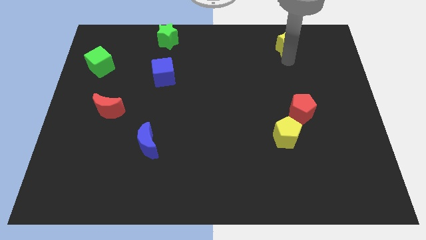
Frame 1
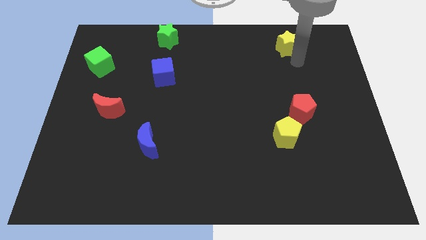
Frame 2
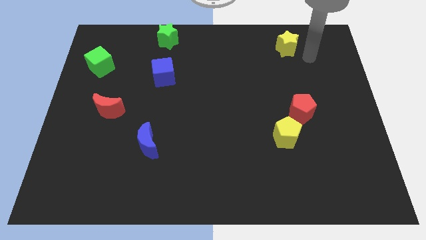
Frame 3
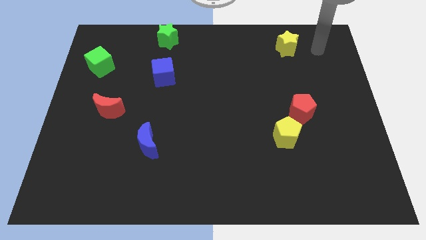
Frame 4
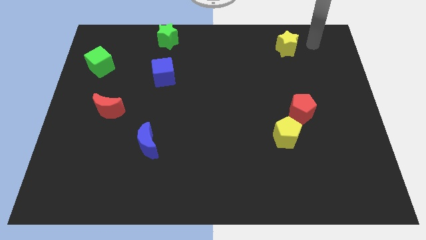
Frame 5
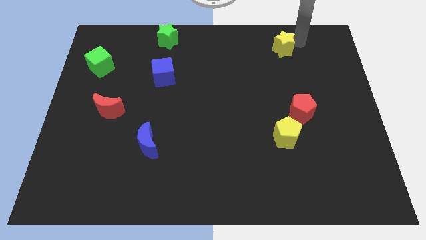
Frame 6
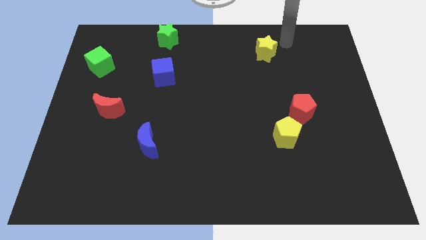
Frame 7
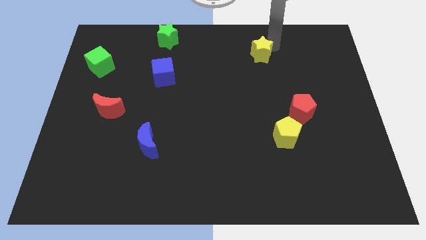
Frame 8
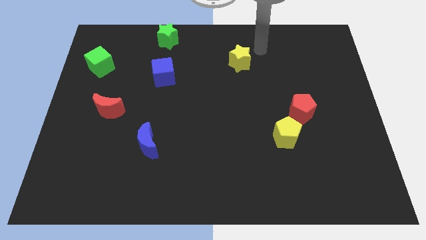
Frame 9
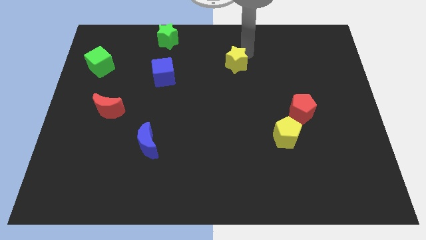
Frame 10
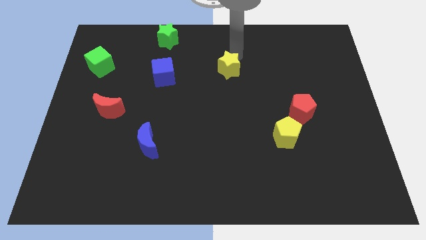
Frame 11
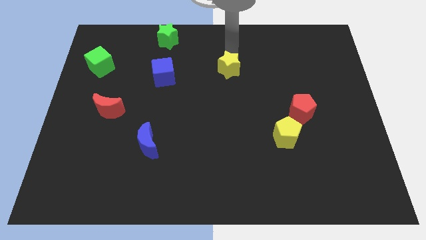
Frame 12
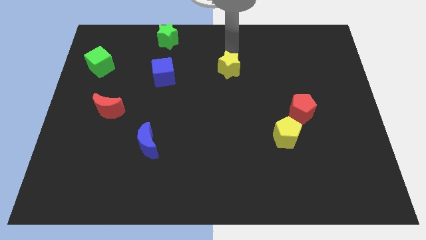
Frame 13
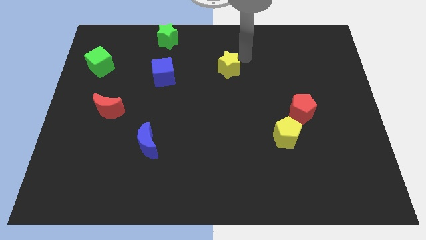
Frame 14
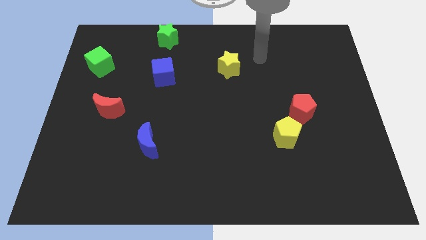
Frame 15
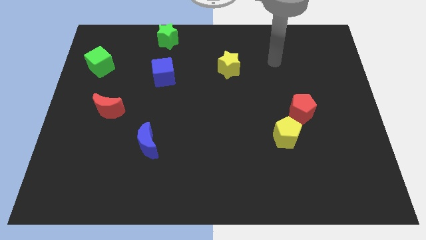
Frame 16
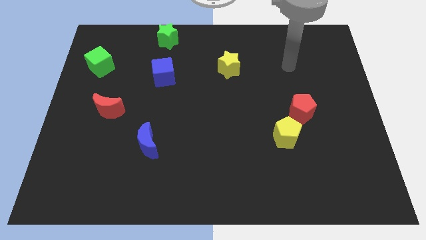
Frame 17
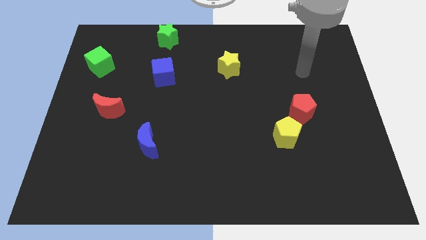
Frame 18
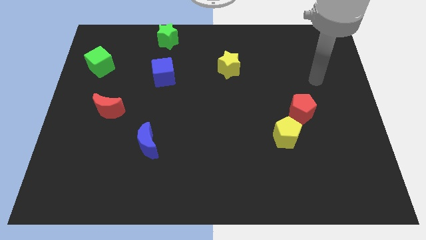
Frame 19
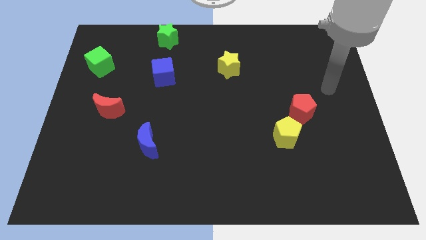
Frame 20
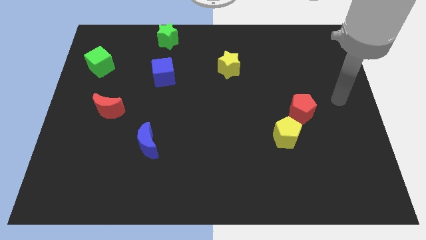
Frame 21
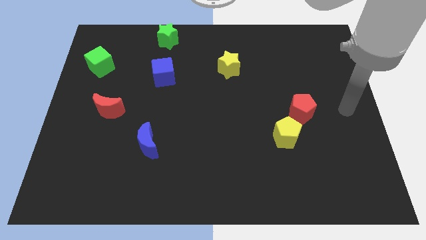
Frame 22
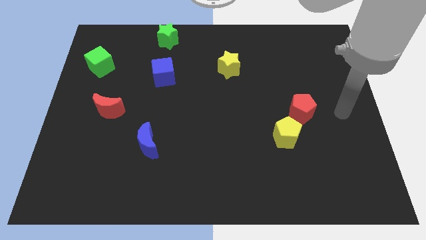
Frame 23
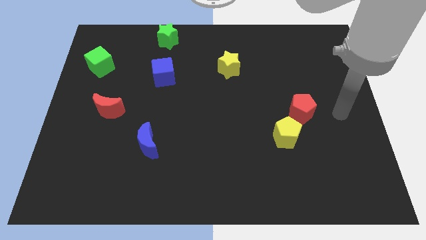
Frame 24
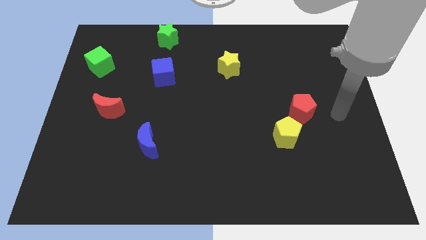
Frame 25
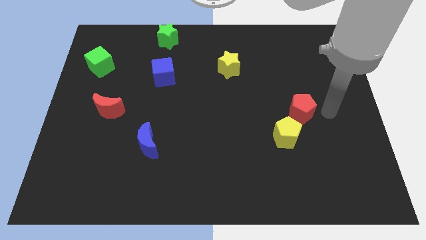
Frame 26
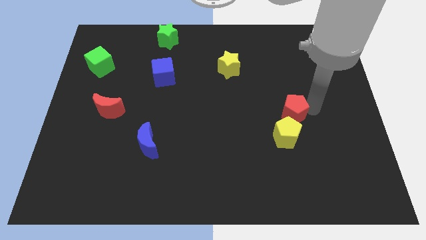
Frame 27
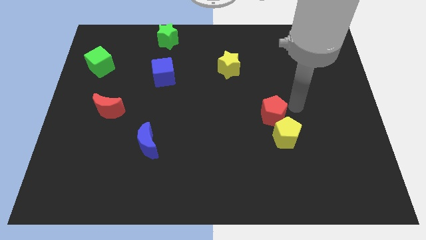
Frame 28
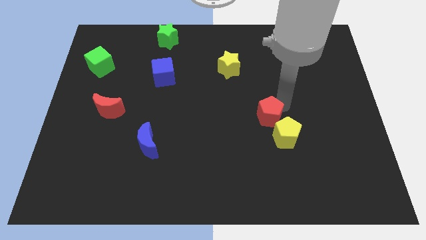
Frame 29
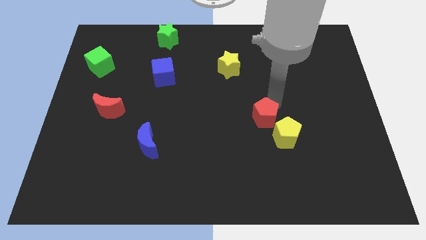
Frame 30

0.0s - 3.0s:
move the yellow star towards the center and red pentagon towards right

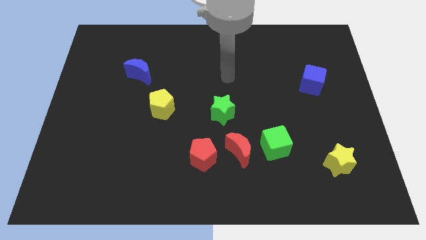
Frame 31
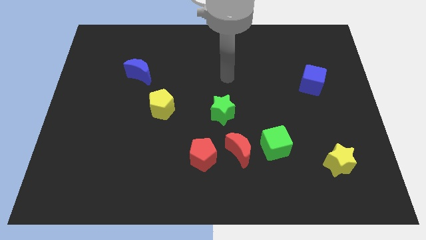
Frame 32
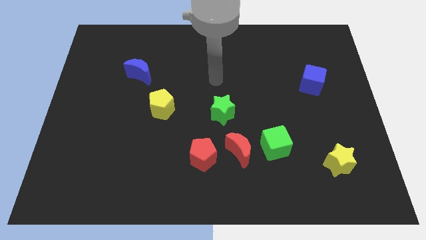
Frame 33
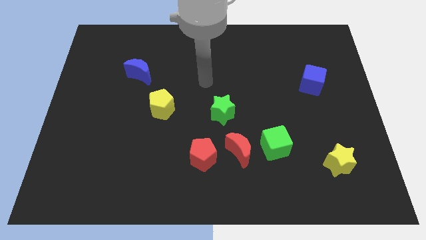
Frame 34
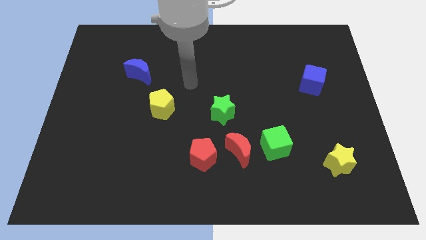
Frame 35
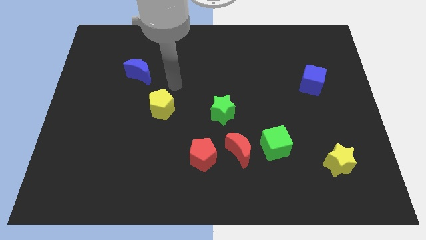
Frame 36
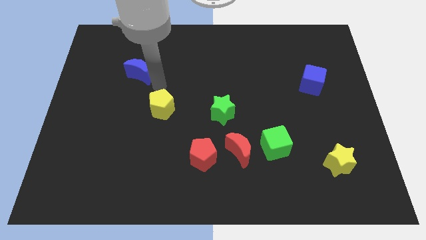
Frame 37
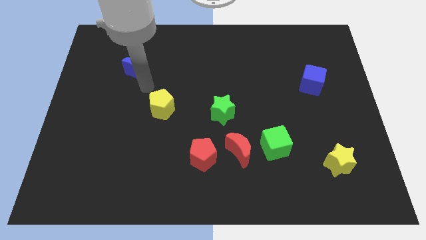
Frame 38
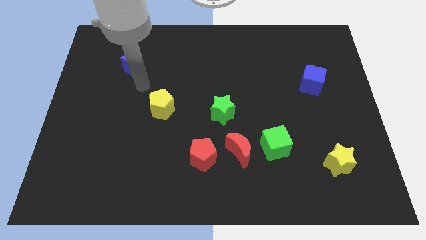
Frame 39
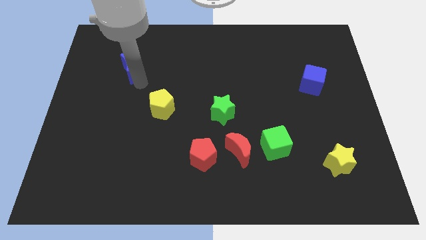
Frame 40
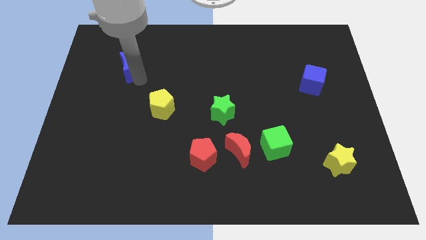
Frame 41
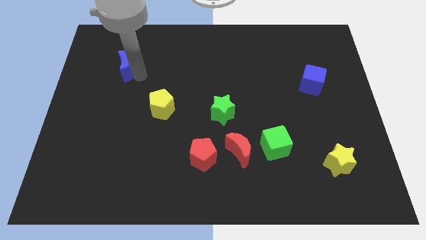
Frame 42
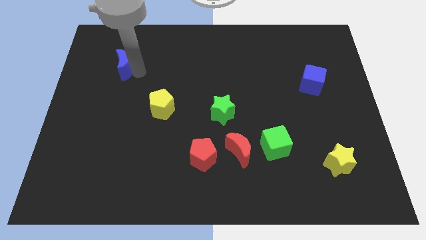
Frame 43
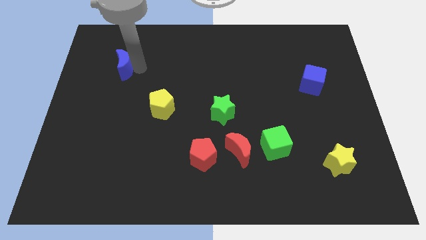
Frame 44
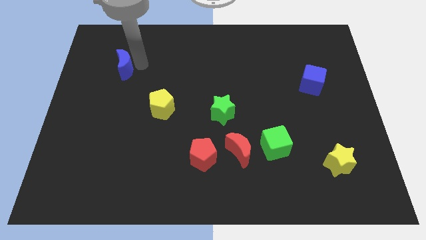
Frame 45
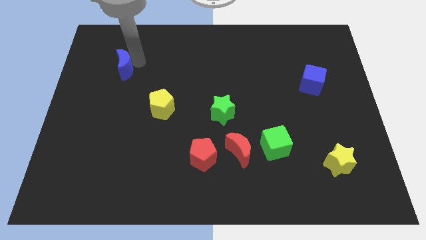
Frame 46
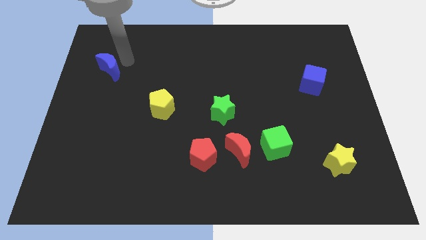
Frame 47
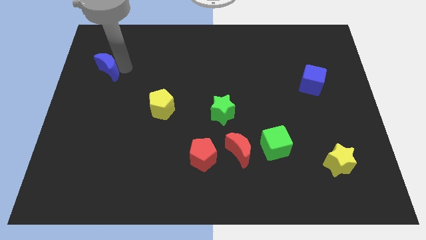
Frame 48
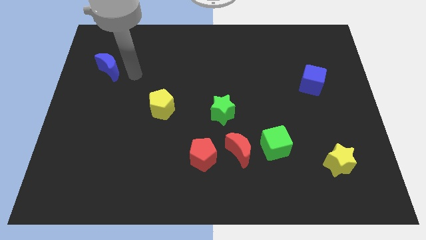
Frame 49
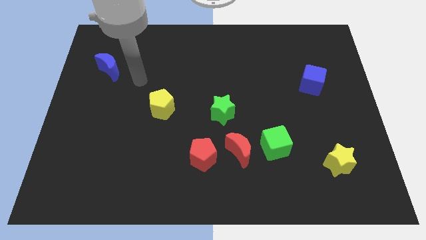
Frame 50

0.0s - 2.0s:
move the blue crescent towards the left side of the board

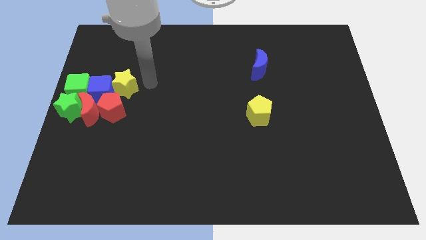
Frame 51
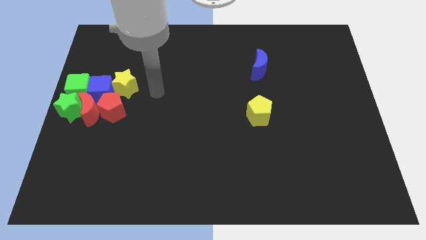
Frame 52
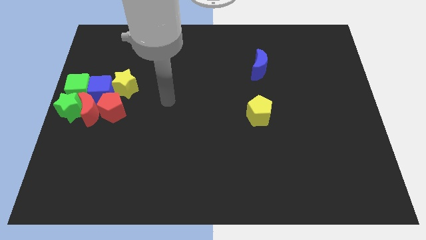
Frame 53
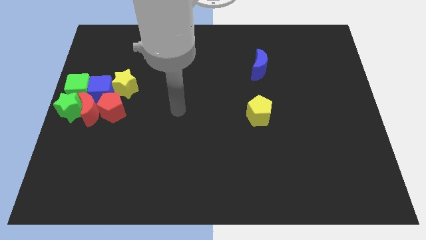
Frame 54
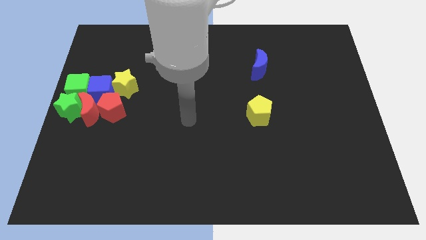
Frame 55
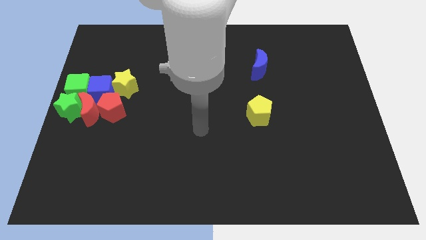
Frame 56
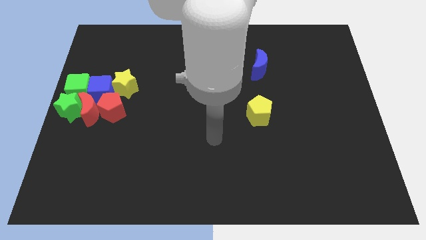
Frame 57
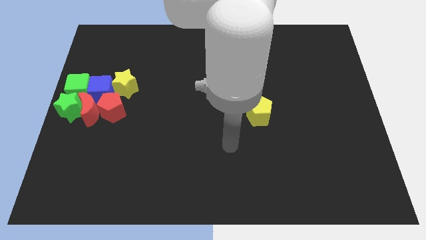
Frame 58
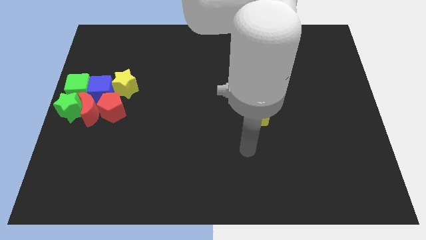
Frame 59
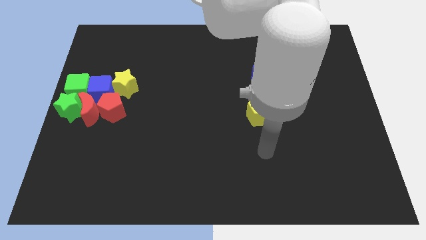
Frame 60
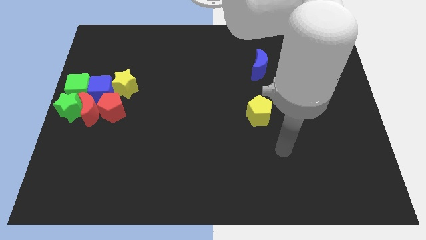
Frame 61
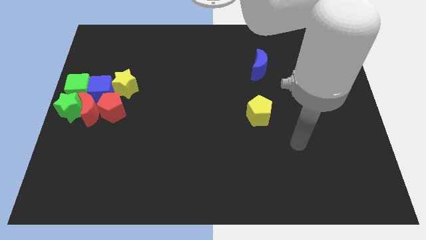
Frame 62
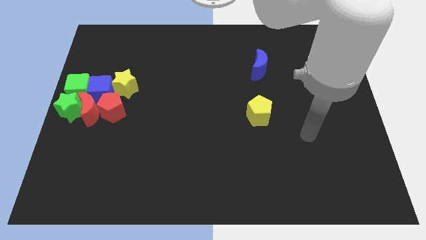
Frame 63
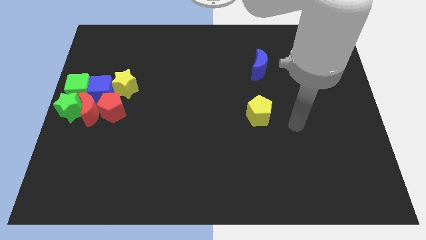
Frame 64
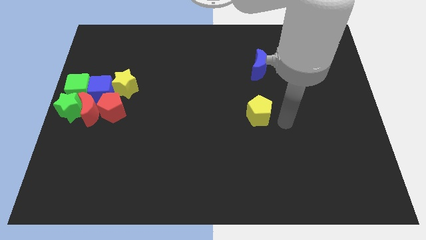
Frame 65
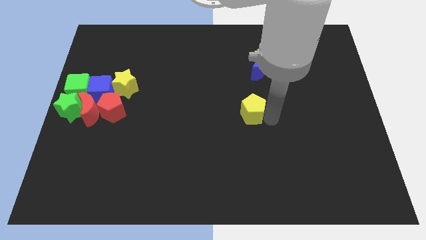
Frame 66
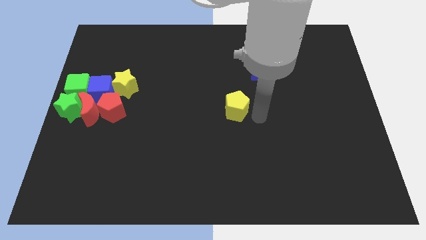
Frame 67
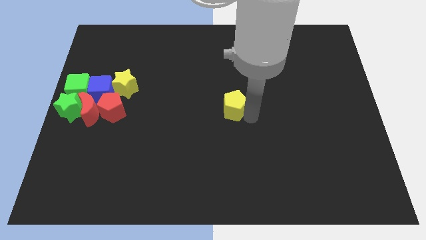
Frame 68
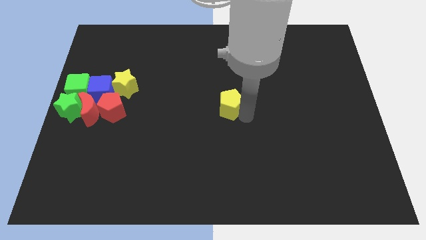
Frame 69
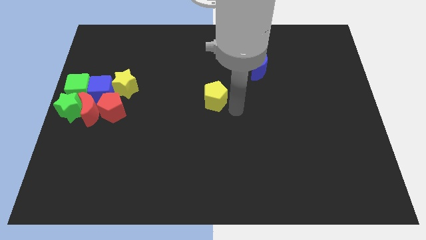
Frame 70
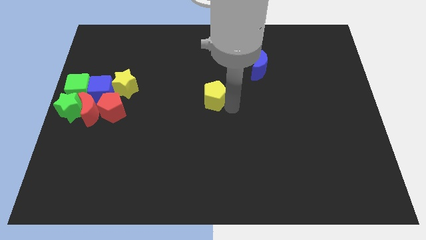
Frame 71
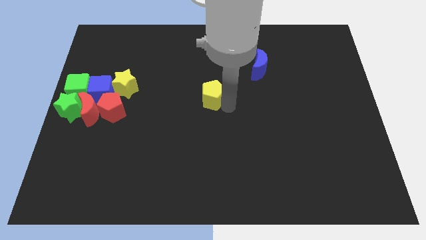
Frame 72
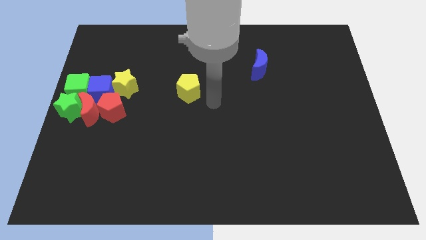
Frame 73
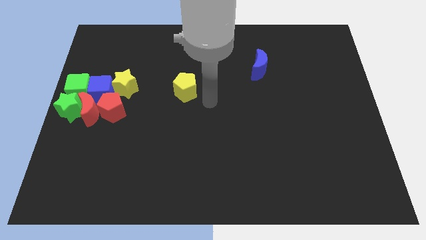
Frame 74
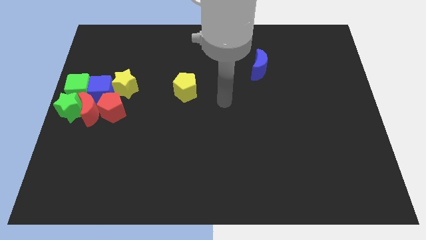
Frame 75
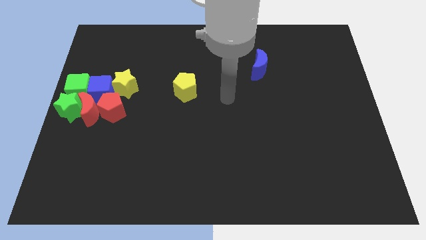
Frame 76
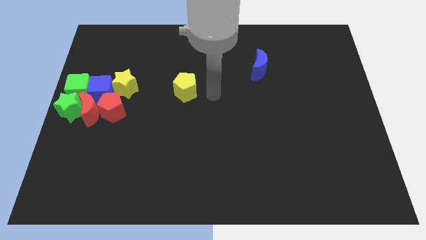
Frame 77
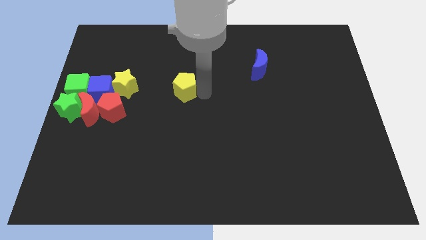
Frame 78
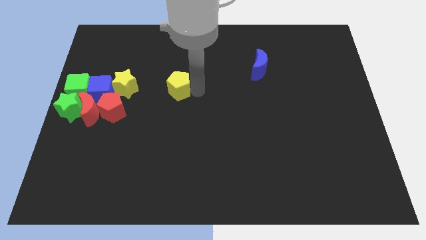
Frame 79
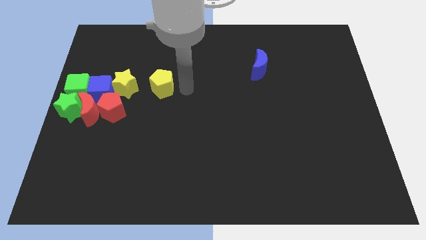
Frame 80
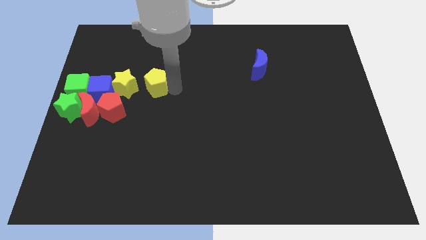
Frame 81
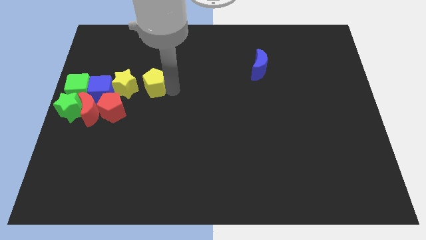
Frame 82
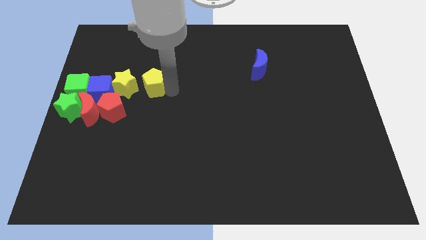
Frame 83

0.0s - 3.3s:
move the yellow pentagon to the right of the yellow star

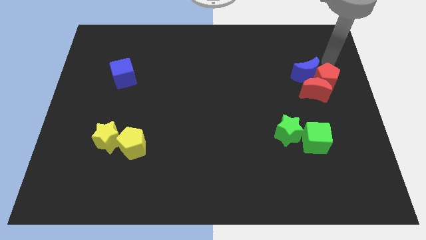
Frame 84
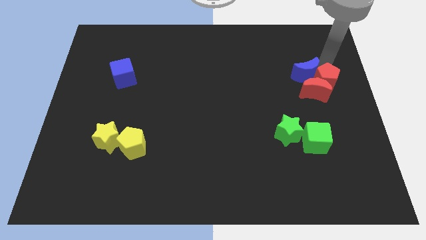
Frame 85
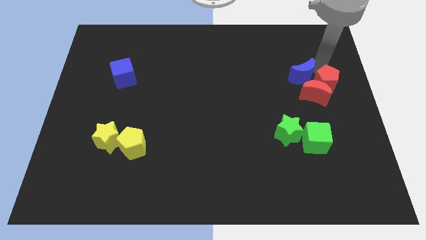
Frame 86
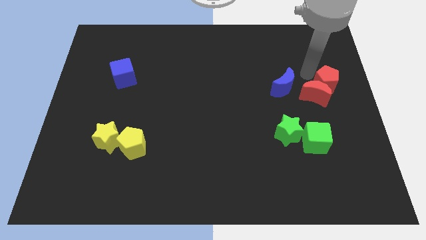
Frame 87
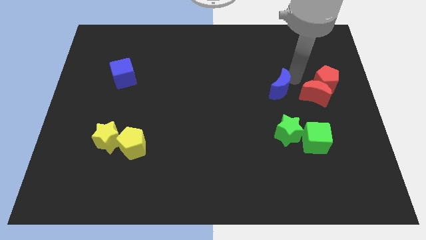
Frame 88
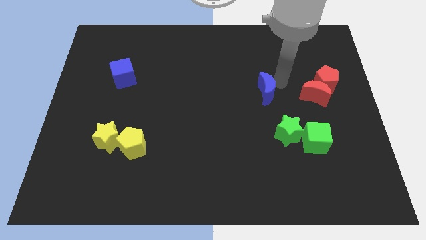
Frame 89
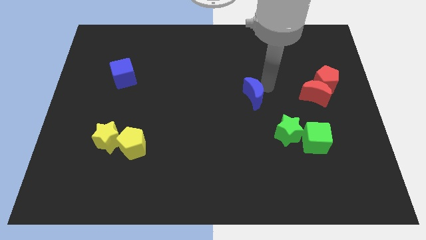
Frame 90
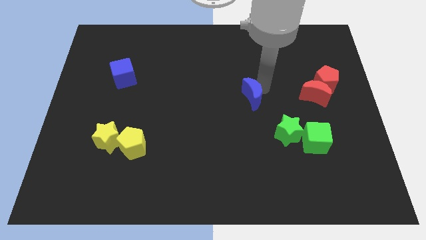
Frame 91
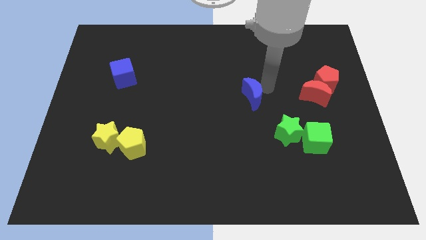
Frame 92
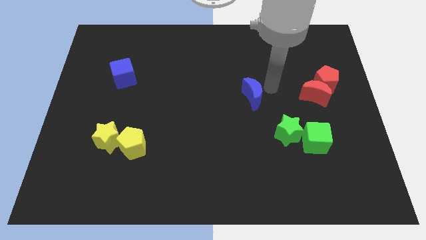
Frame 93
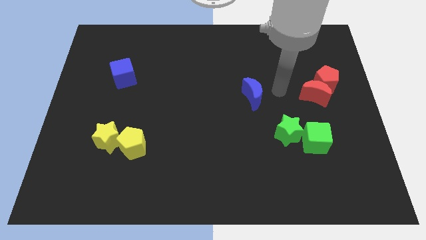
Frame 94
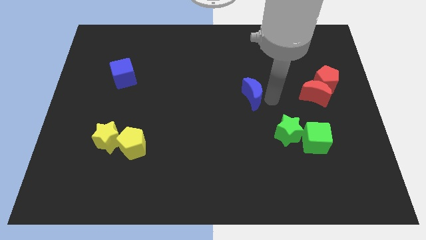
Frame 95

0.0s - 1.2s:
separate the blue moon from the red blocks
